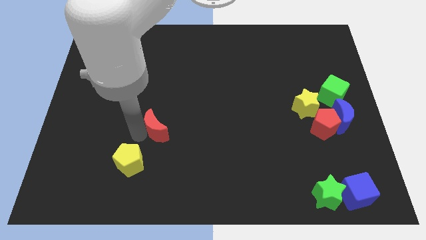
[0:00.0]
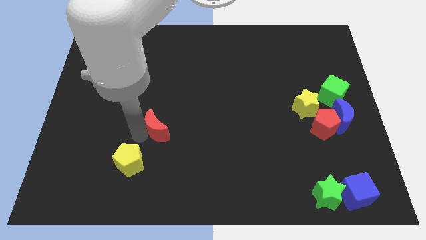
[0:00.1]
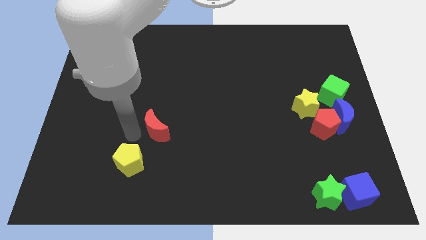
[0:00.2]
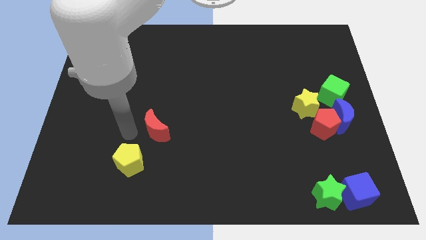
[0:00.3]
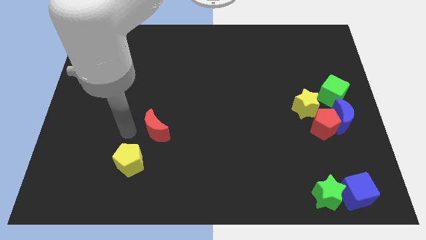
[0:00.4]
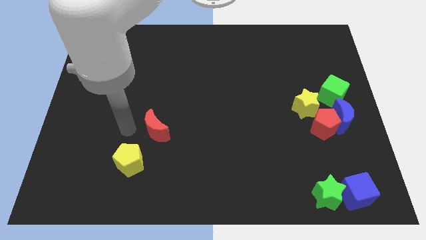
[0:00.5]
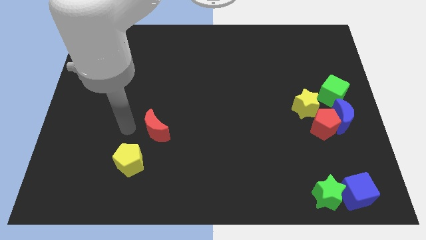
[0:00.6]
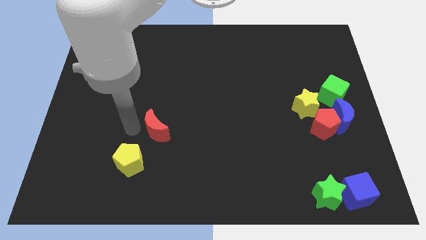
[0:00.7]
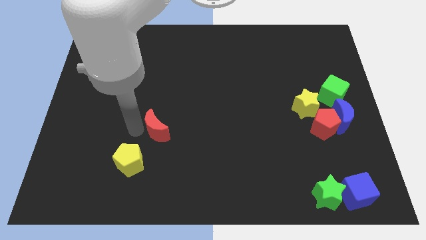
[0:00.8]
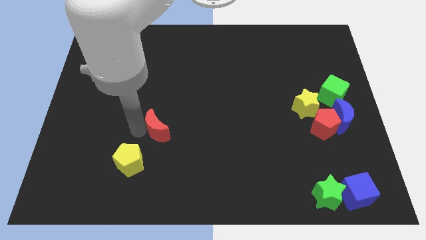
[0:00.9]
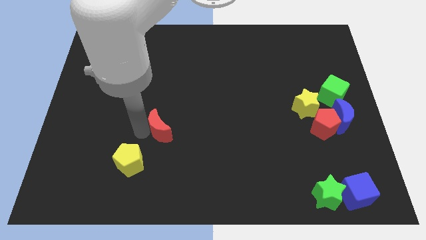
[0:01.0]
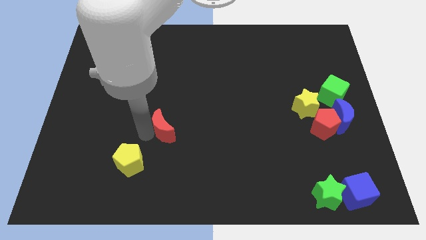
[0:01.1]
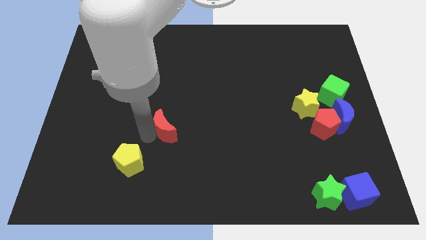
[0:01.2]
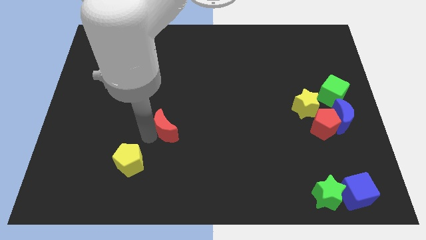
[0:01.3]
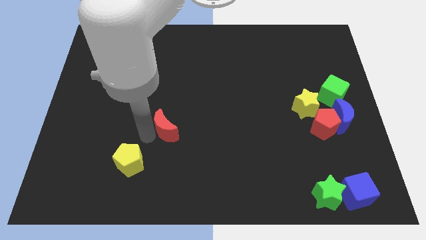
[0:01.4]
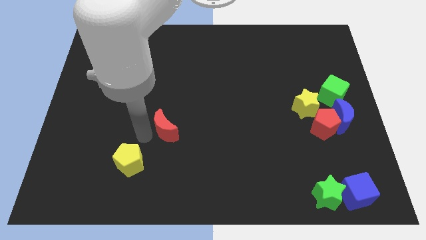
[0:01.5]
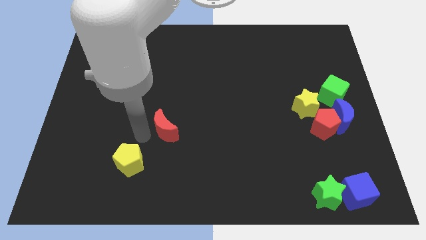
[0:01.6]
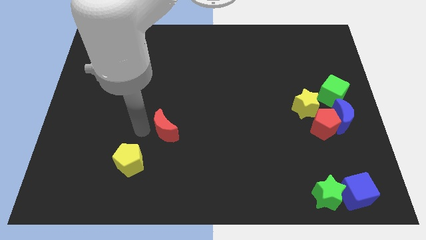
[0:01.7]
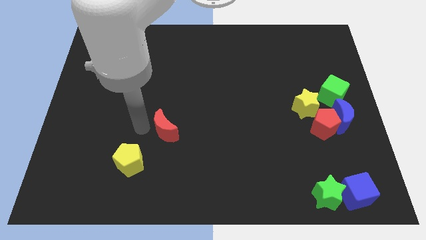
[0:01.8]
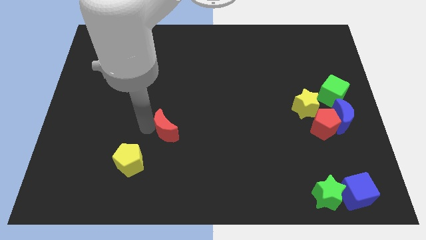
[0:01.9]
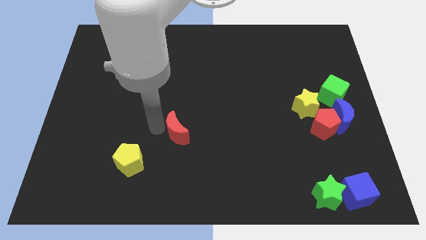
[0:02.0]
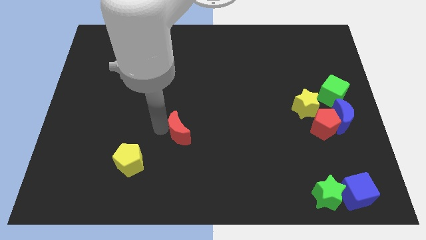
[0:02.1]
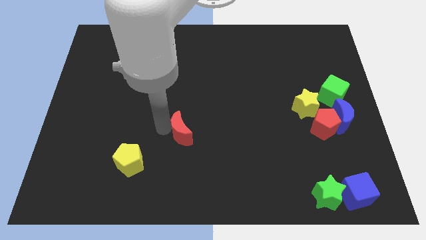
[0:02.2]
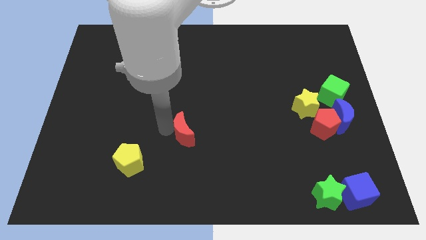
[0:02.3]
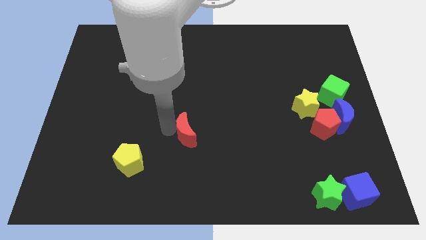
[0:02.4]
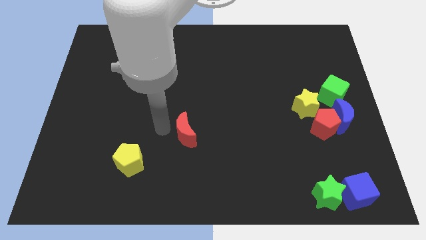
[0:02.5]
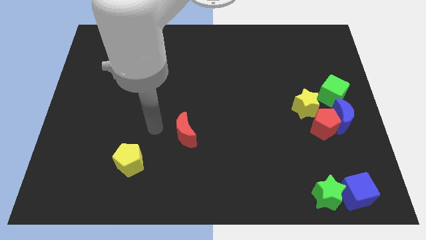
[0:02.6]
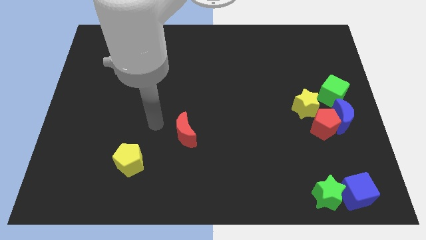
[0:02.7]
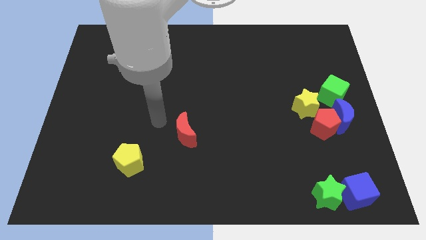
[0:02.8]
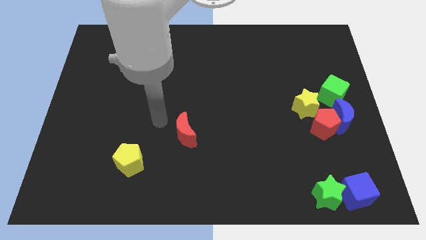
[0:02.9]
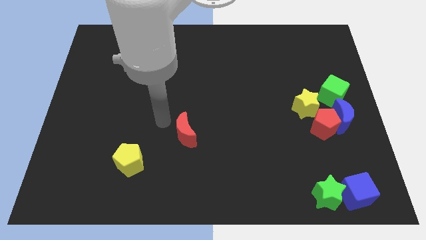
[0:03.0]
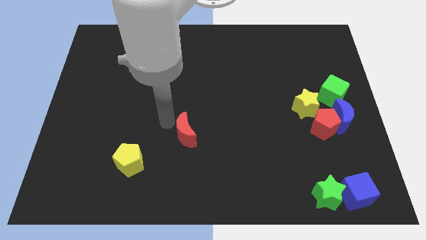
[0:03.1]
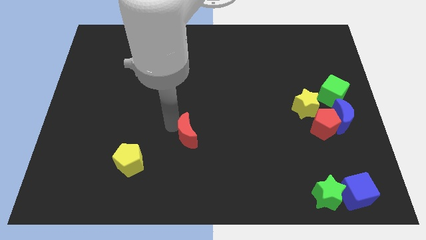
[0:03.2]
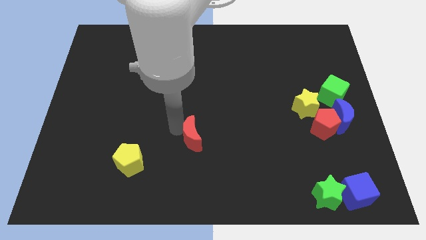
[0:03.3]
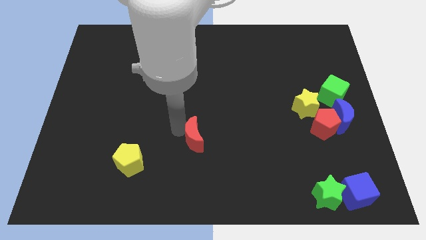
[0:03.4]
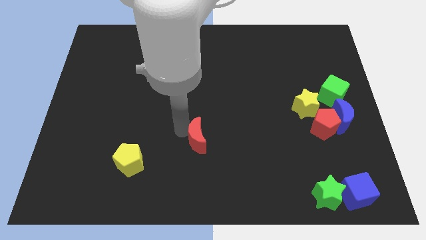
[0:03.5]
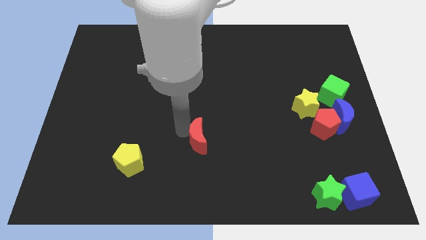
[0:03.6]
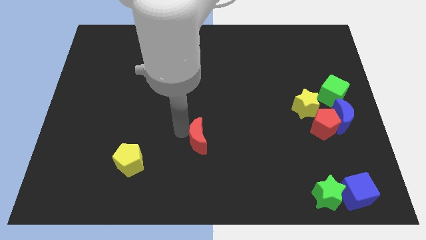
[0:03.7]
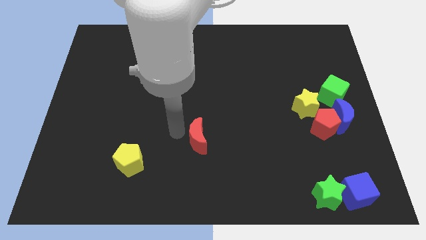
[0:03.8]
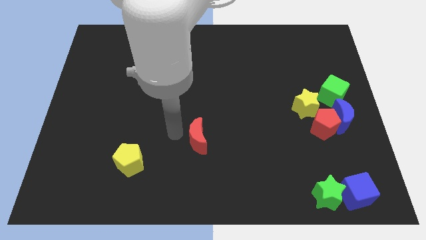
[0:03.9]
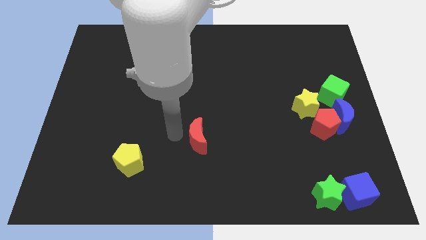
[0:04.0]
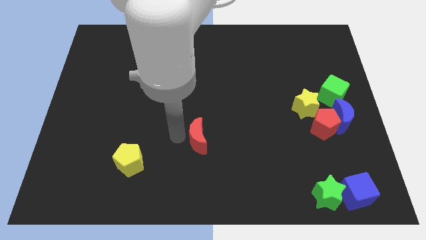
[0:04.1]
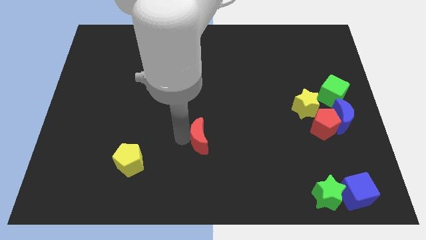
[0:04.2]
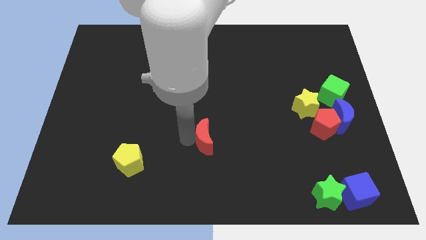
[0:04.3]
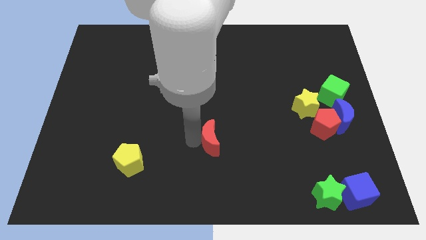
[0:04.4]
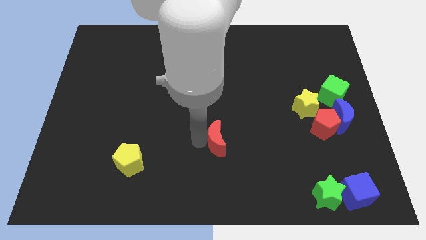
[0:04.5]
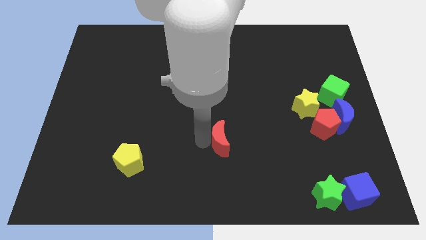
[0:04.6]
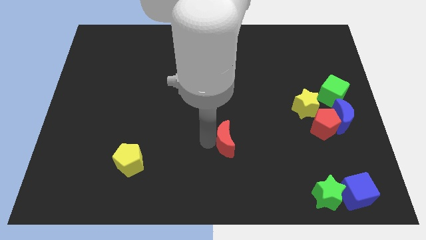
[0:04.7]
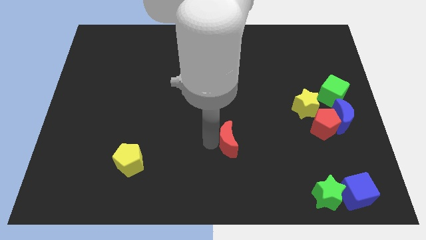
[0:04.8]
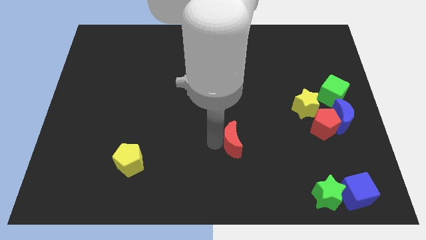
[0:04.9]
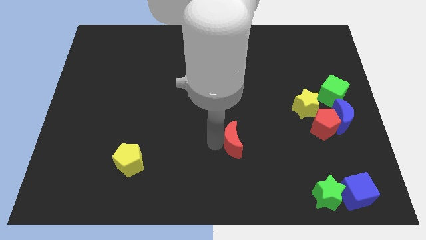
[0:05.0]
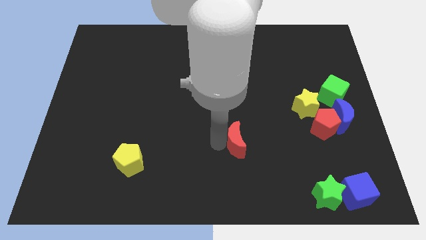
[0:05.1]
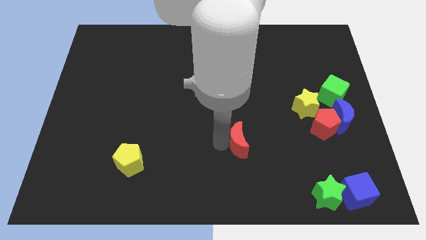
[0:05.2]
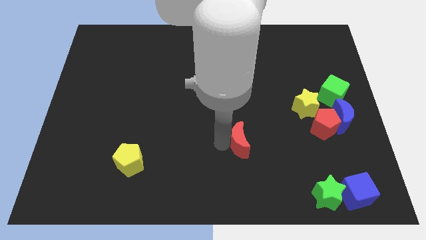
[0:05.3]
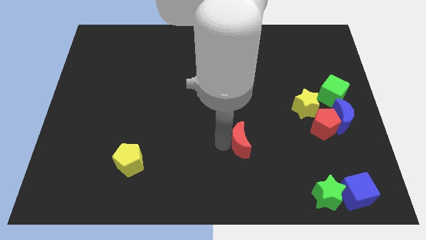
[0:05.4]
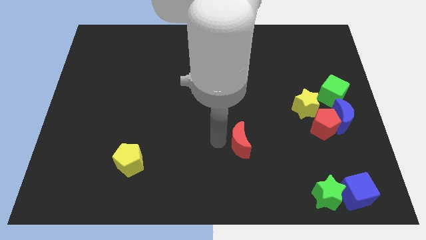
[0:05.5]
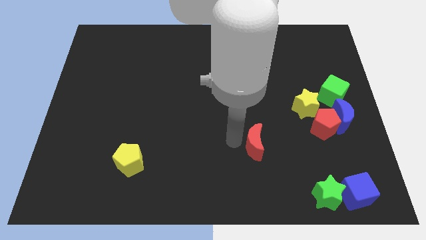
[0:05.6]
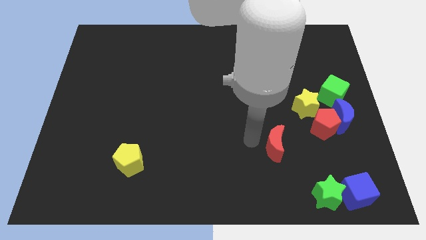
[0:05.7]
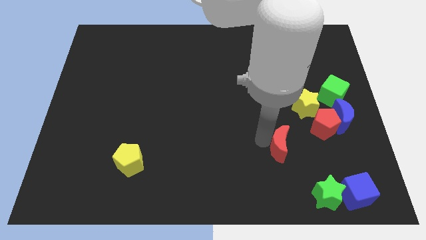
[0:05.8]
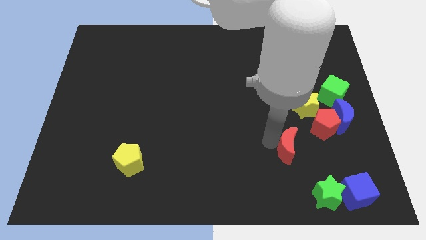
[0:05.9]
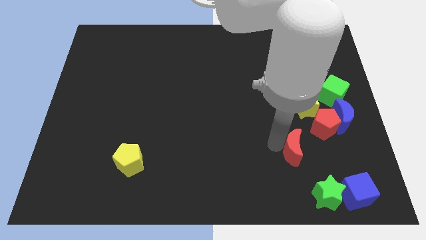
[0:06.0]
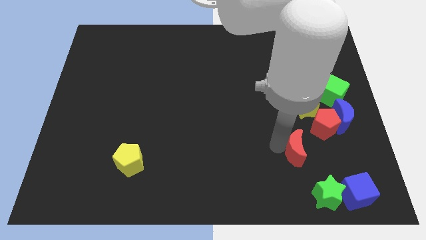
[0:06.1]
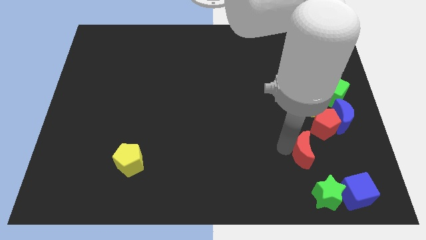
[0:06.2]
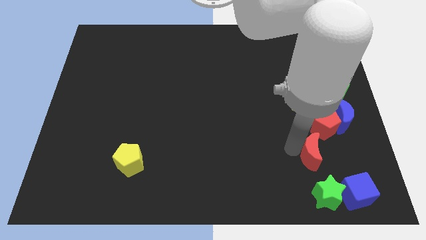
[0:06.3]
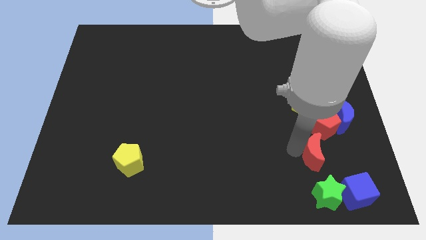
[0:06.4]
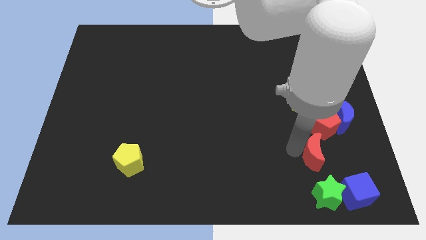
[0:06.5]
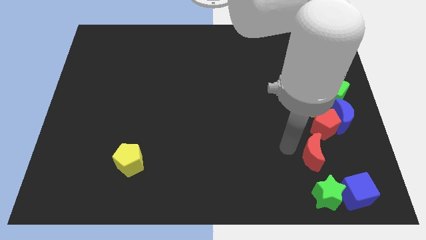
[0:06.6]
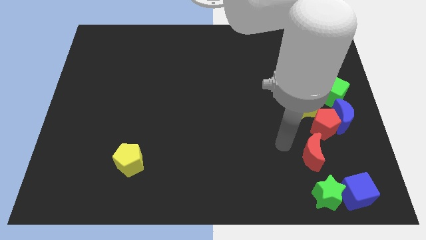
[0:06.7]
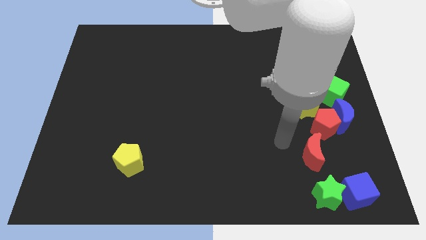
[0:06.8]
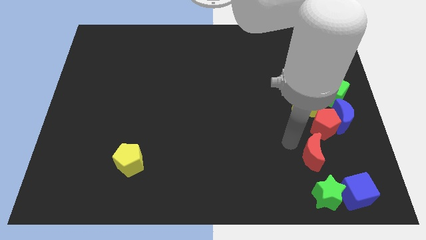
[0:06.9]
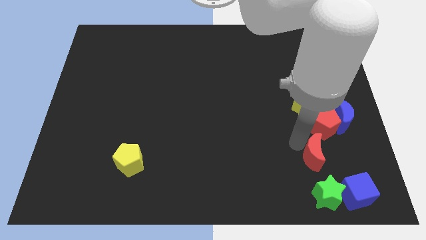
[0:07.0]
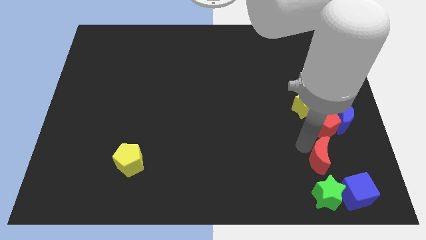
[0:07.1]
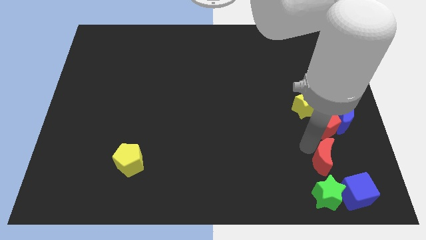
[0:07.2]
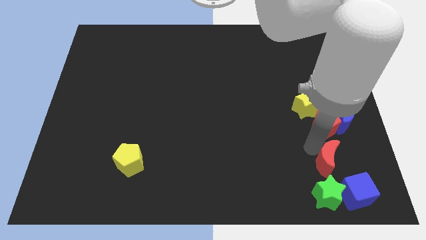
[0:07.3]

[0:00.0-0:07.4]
place red moon above green star

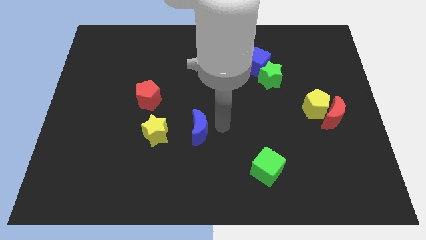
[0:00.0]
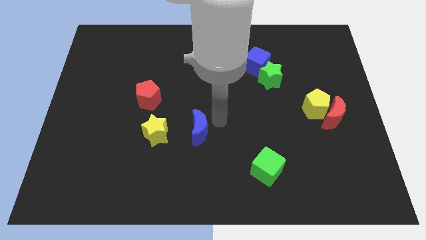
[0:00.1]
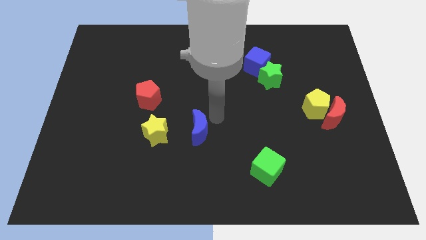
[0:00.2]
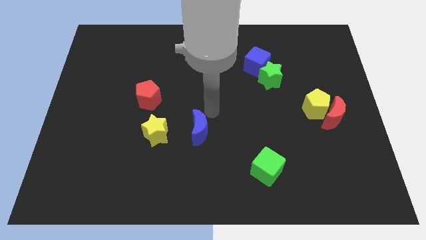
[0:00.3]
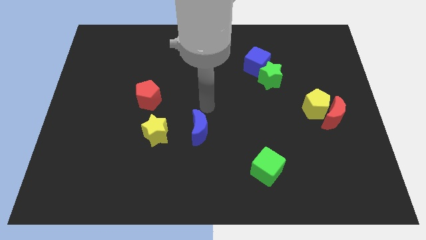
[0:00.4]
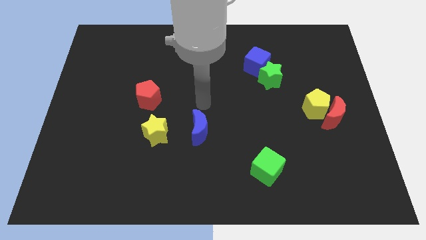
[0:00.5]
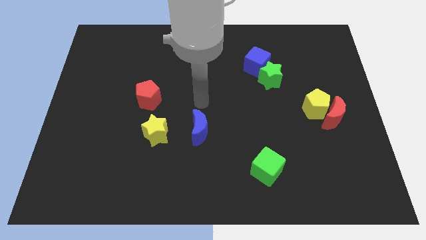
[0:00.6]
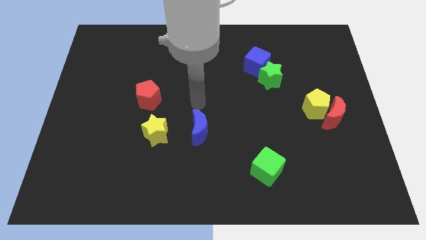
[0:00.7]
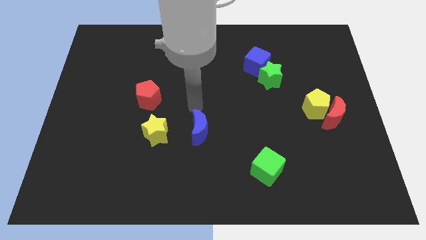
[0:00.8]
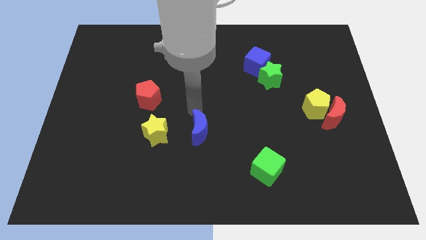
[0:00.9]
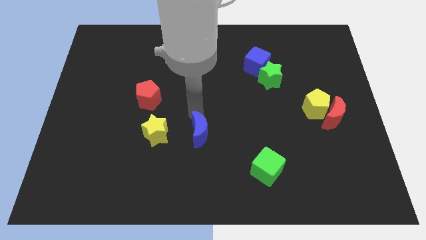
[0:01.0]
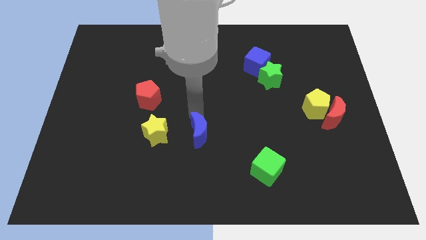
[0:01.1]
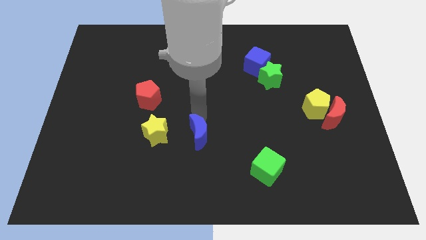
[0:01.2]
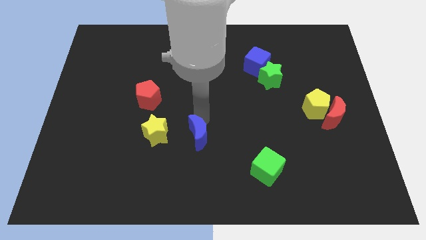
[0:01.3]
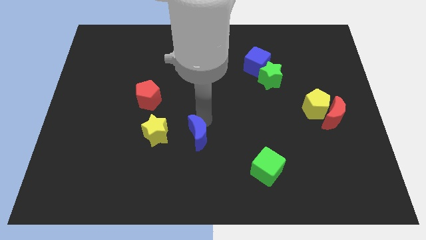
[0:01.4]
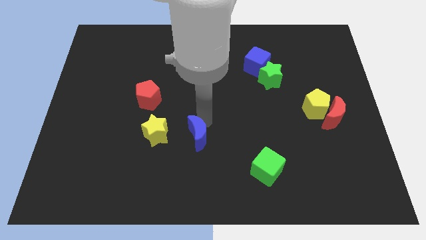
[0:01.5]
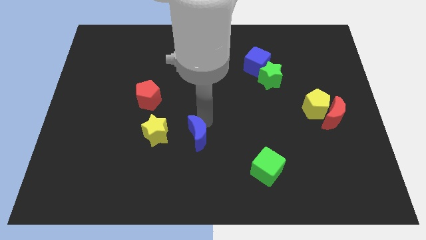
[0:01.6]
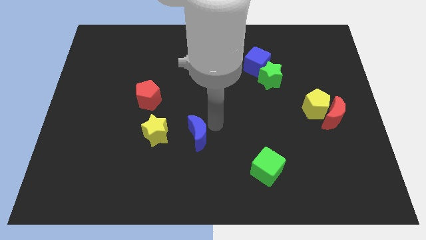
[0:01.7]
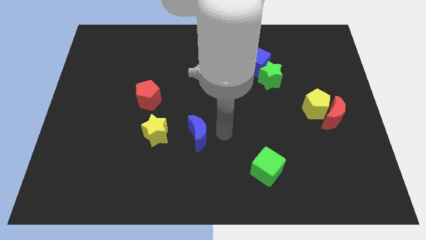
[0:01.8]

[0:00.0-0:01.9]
push the blue crescent to the right side of the yellow star
